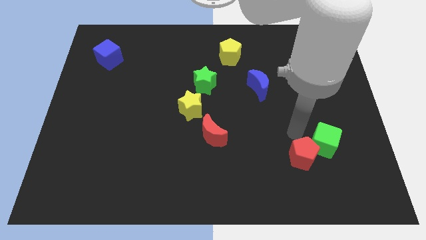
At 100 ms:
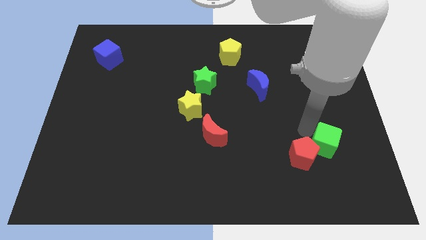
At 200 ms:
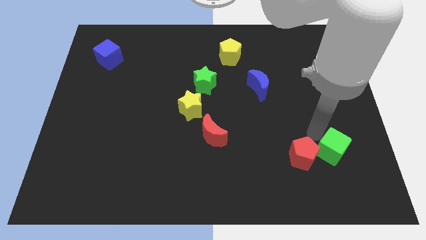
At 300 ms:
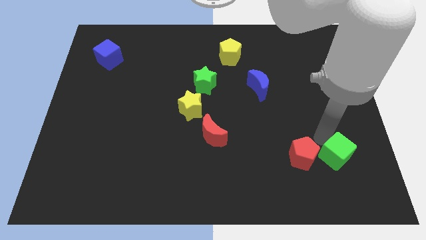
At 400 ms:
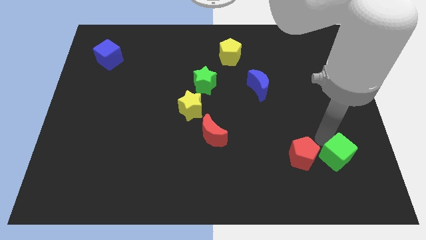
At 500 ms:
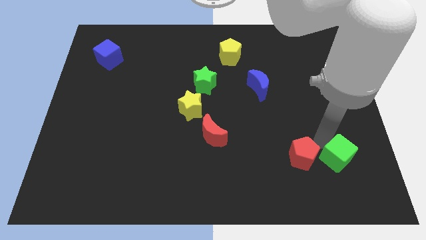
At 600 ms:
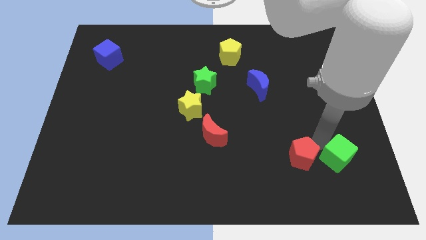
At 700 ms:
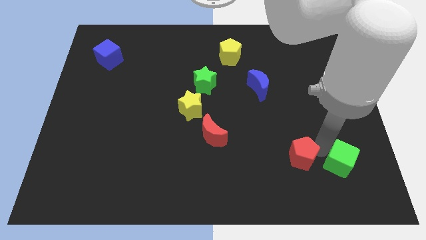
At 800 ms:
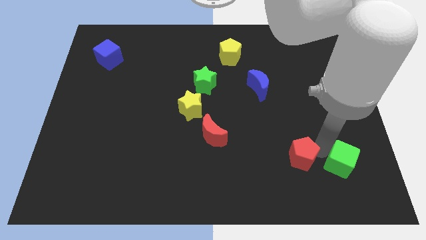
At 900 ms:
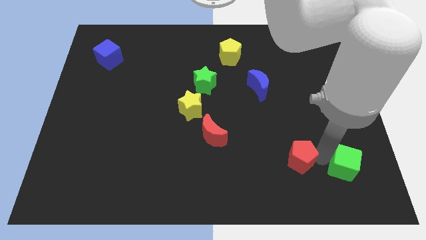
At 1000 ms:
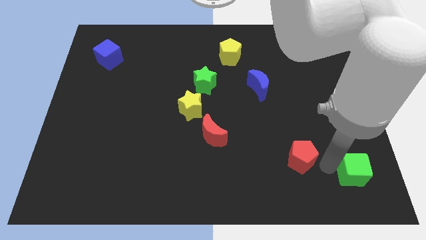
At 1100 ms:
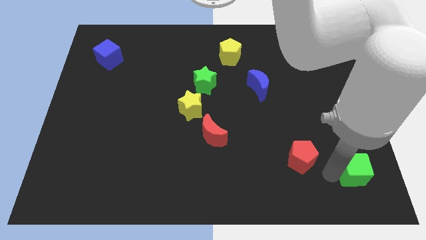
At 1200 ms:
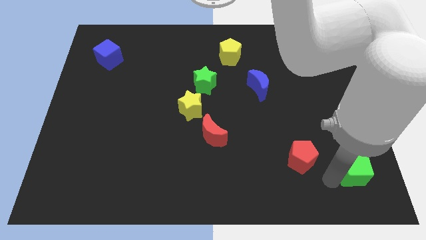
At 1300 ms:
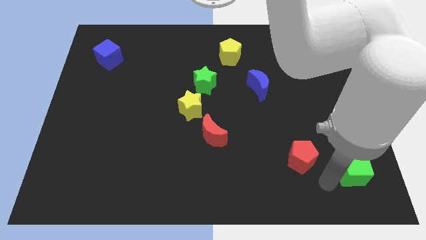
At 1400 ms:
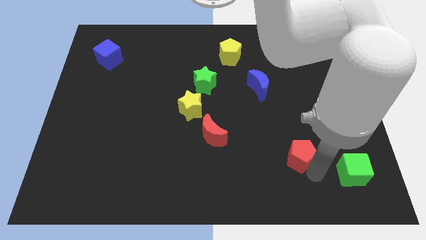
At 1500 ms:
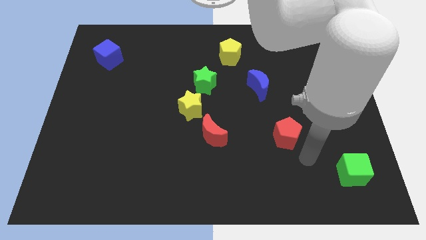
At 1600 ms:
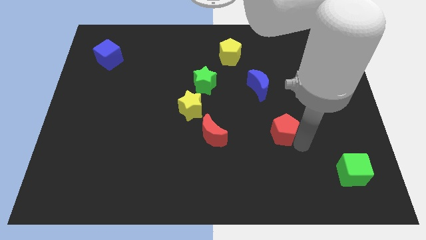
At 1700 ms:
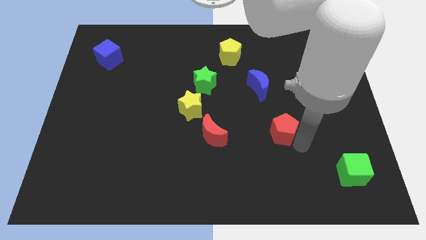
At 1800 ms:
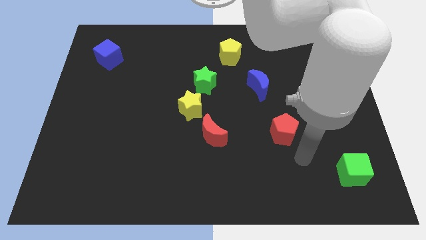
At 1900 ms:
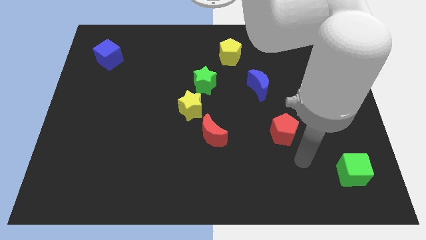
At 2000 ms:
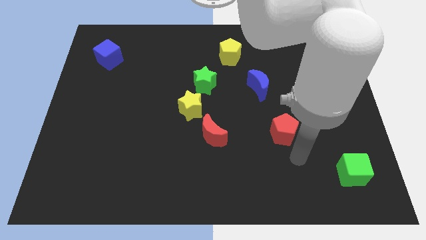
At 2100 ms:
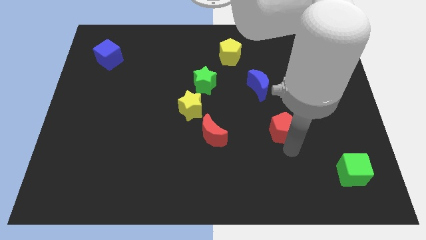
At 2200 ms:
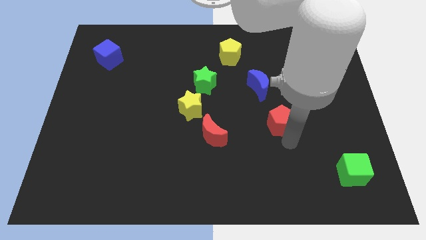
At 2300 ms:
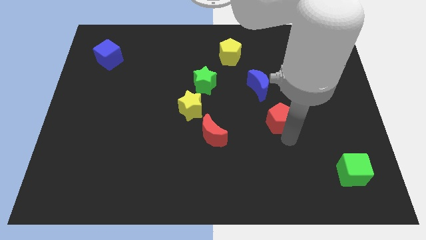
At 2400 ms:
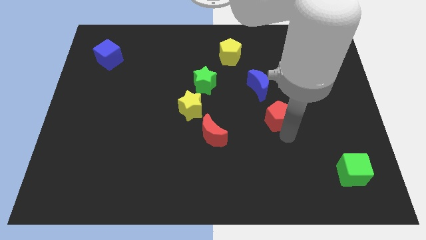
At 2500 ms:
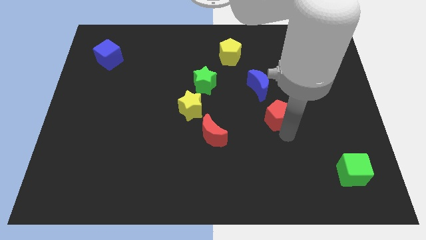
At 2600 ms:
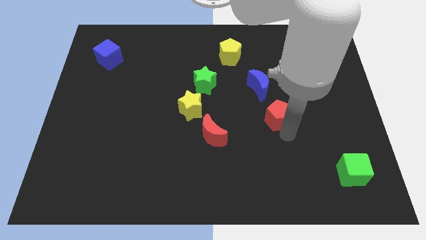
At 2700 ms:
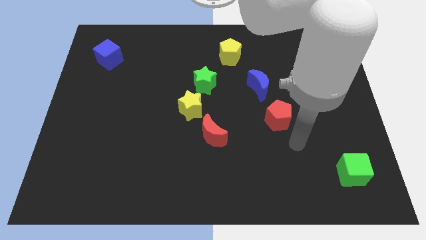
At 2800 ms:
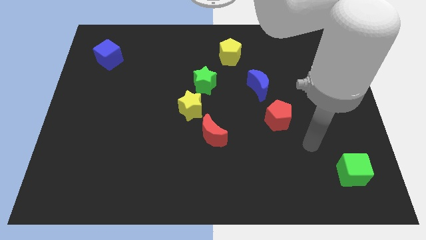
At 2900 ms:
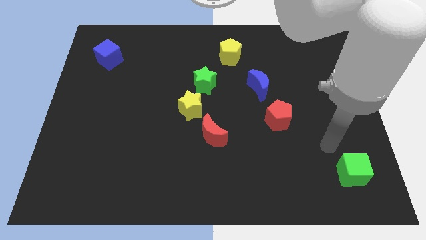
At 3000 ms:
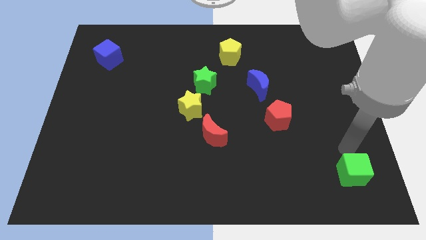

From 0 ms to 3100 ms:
move the red pentagon to the bottom side of the blue moon

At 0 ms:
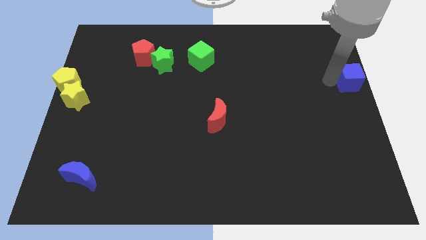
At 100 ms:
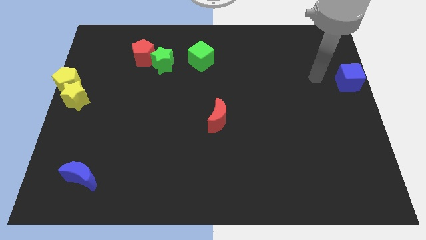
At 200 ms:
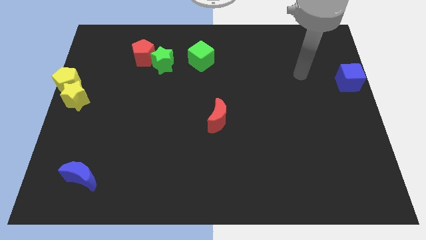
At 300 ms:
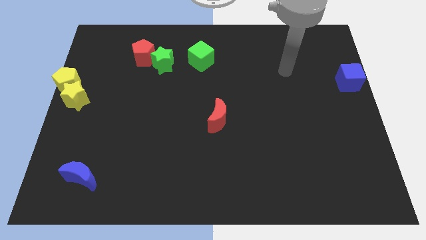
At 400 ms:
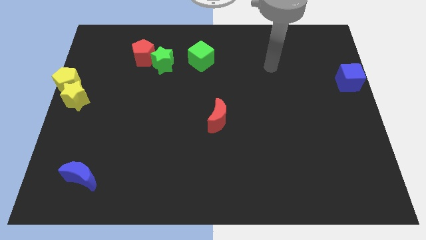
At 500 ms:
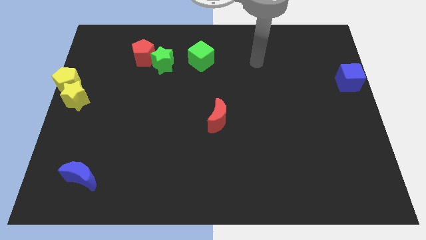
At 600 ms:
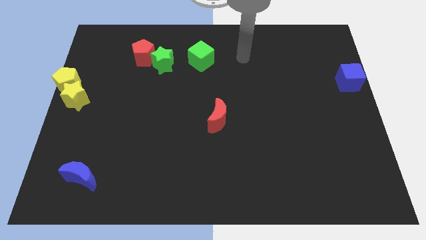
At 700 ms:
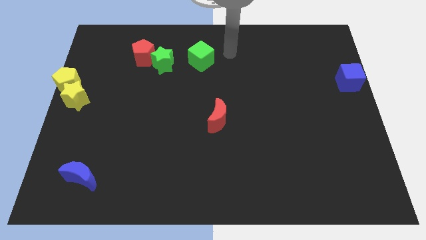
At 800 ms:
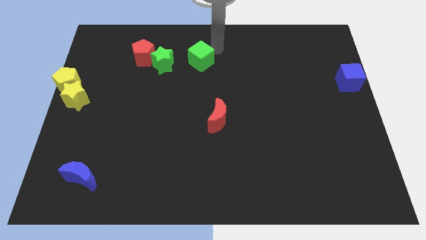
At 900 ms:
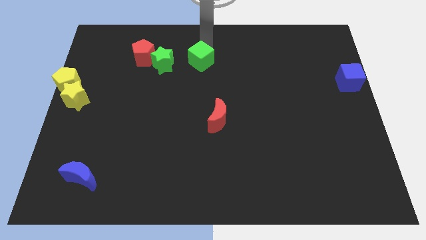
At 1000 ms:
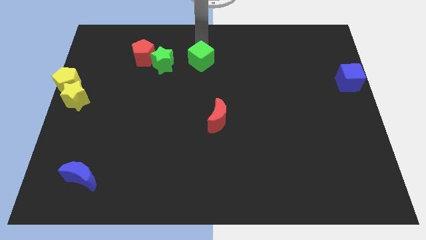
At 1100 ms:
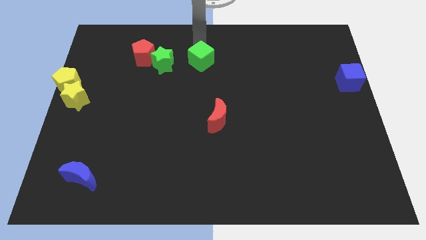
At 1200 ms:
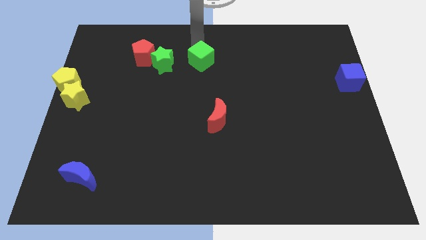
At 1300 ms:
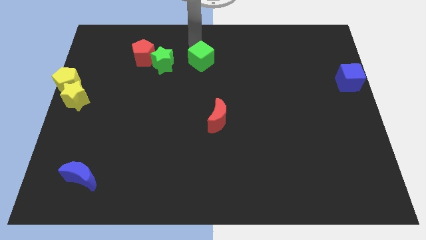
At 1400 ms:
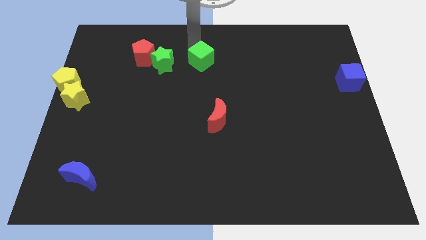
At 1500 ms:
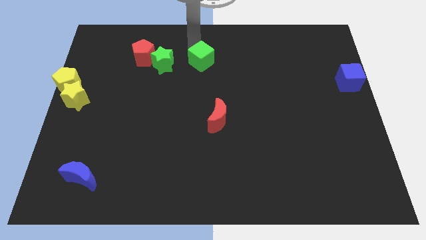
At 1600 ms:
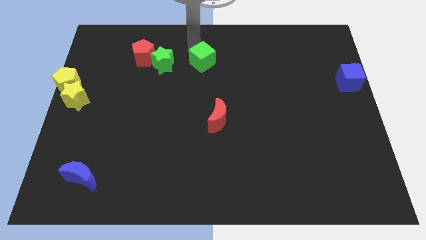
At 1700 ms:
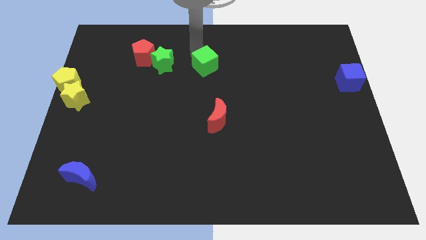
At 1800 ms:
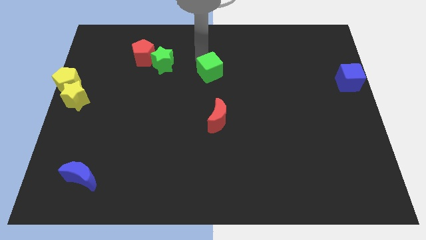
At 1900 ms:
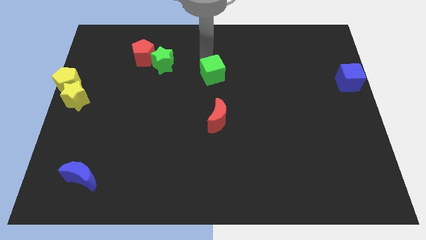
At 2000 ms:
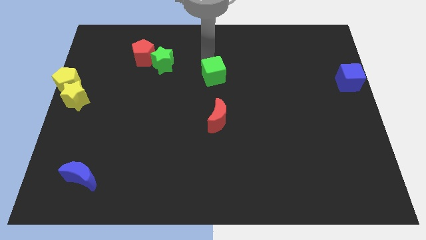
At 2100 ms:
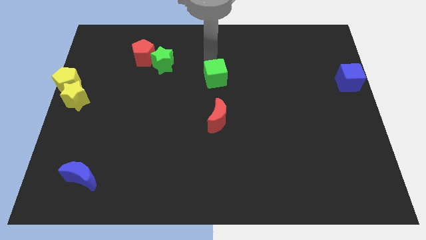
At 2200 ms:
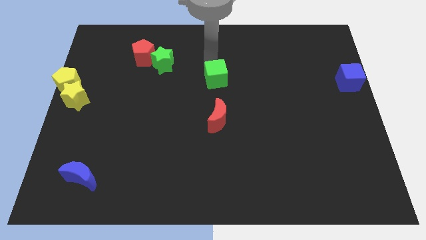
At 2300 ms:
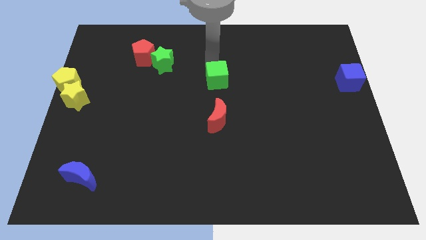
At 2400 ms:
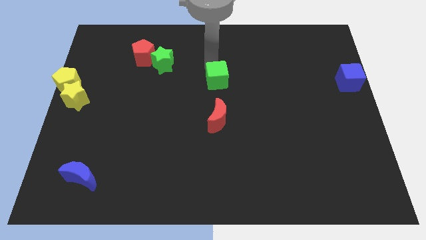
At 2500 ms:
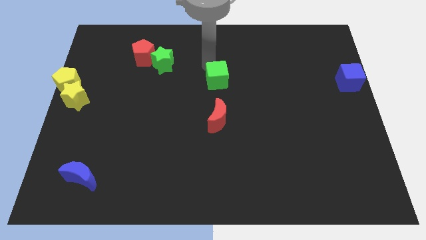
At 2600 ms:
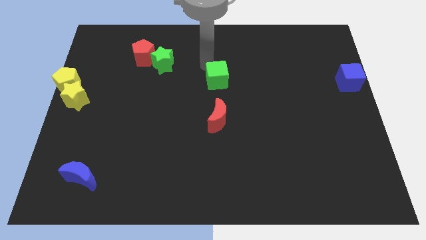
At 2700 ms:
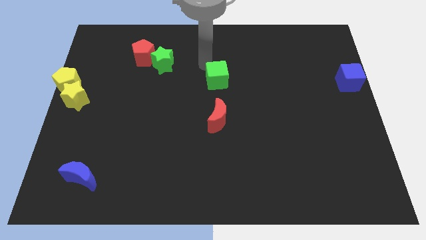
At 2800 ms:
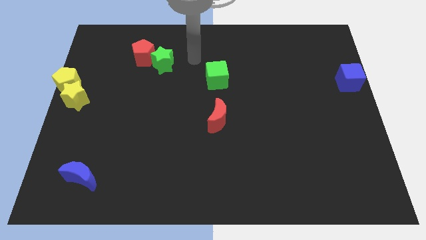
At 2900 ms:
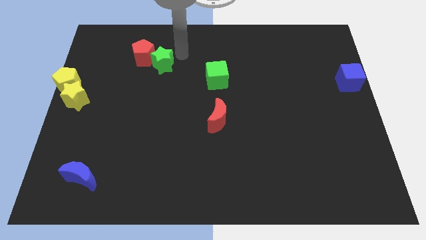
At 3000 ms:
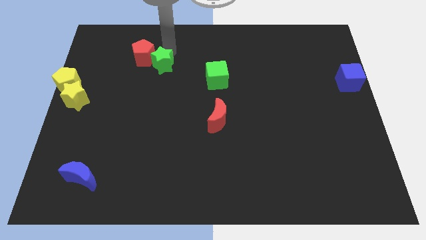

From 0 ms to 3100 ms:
move the green cube at the top side of the red moon

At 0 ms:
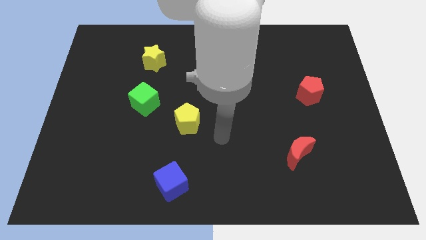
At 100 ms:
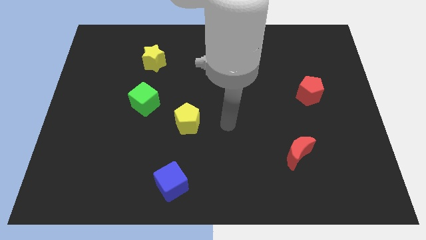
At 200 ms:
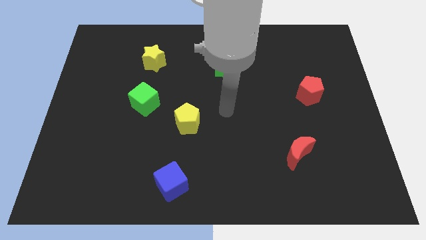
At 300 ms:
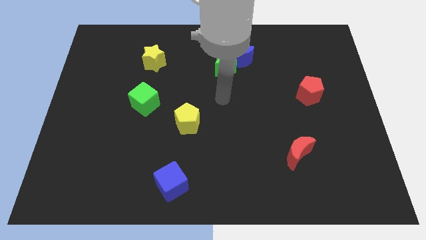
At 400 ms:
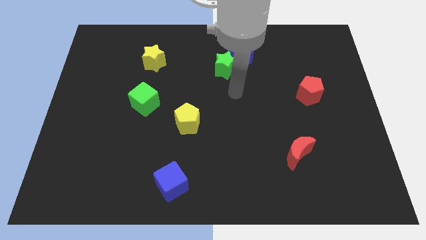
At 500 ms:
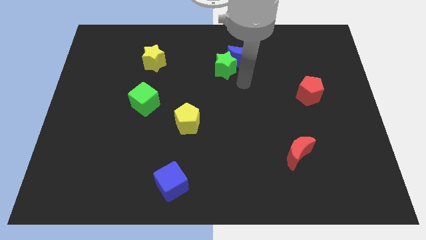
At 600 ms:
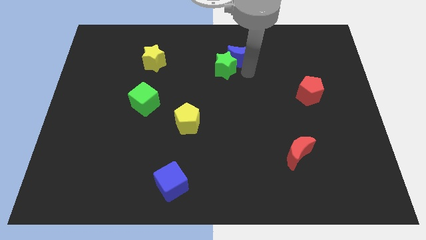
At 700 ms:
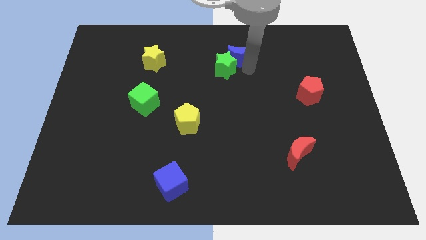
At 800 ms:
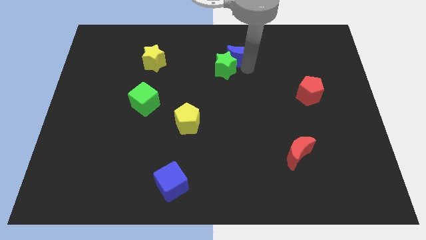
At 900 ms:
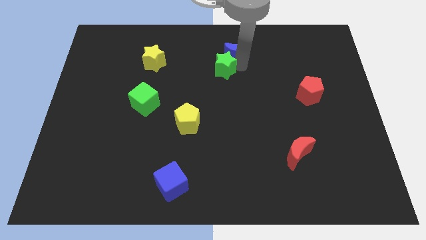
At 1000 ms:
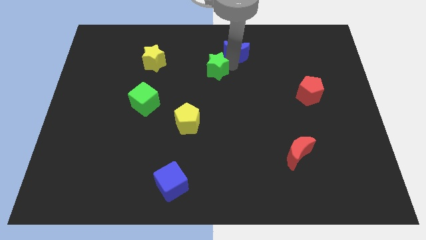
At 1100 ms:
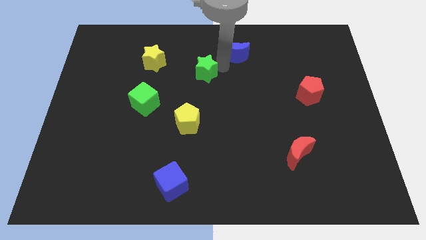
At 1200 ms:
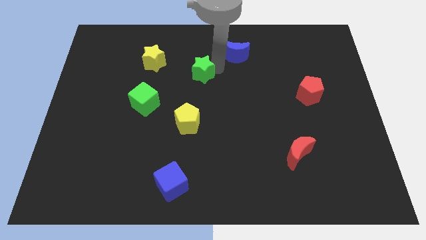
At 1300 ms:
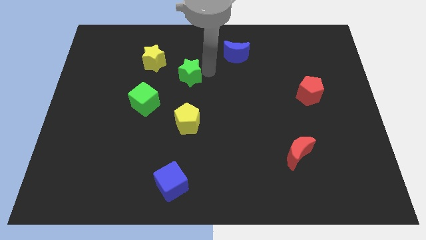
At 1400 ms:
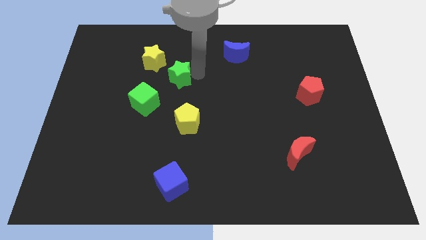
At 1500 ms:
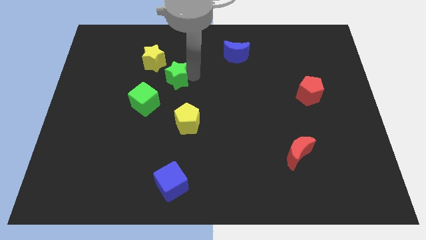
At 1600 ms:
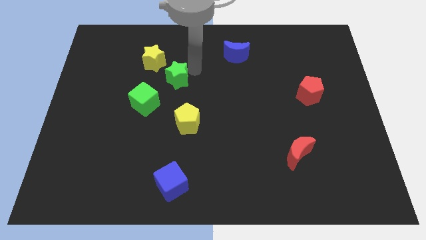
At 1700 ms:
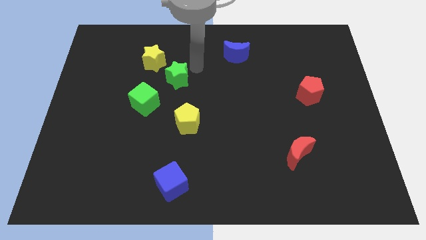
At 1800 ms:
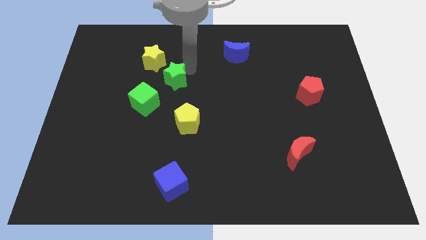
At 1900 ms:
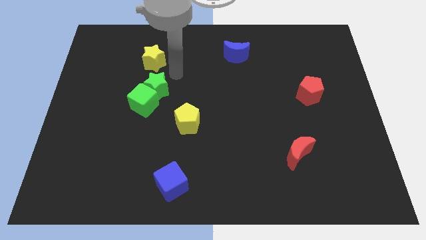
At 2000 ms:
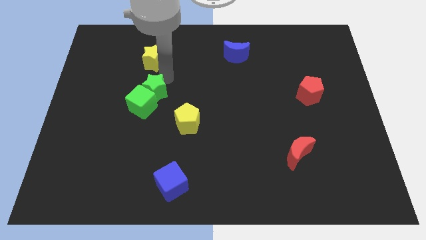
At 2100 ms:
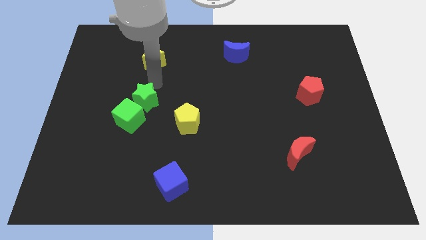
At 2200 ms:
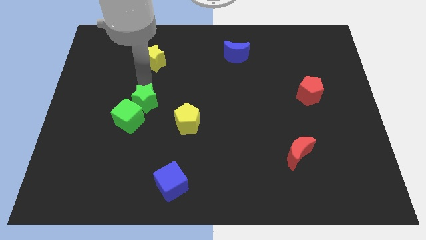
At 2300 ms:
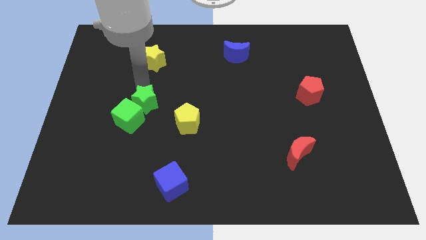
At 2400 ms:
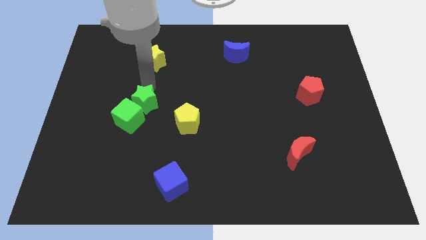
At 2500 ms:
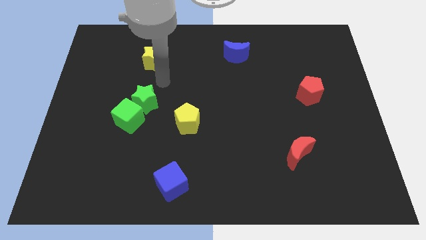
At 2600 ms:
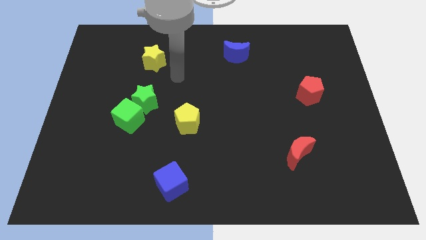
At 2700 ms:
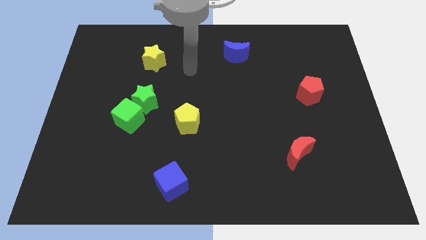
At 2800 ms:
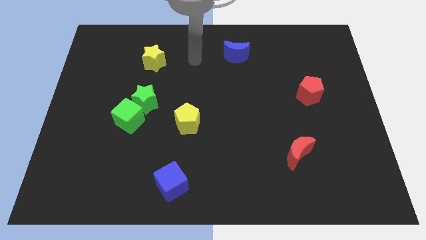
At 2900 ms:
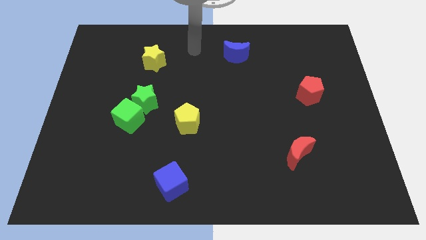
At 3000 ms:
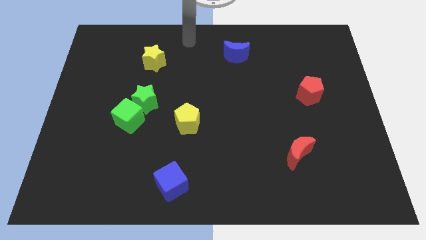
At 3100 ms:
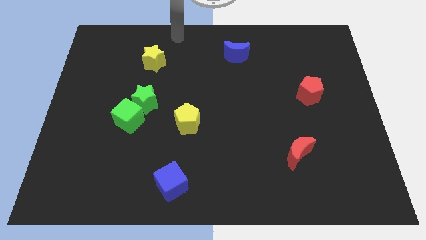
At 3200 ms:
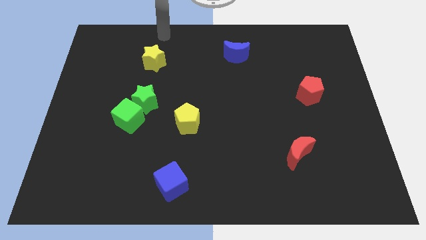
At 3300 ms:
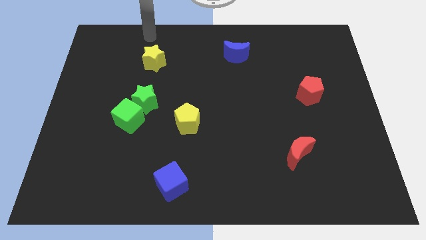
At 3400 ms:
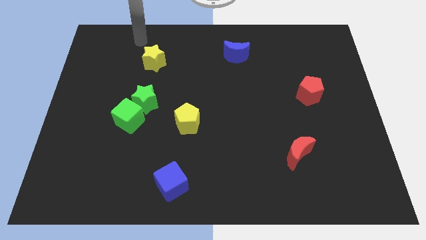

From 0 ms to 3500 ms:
move the green star into green cube
